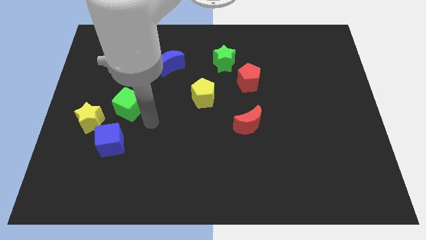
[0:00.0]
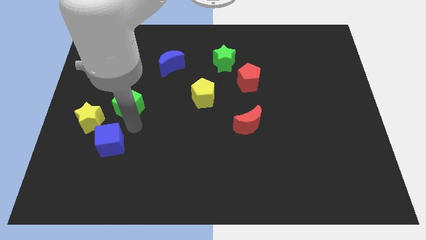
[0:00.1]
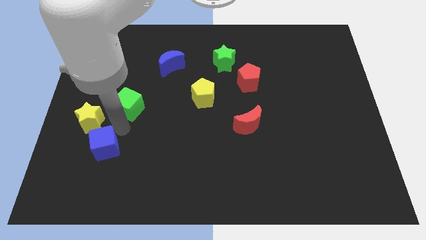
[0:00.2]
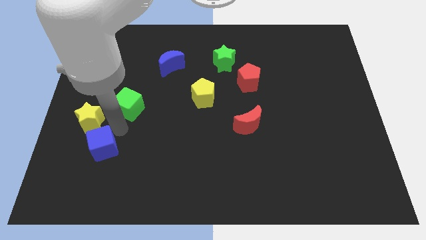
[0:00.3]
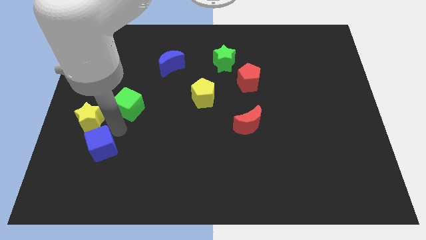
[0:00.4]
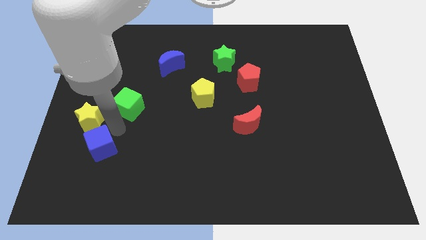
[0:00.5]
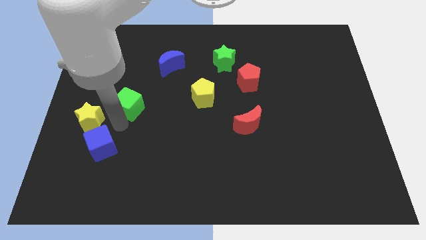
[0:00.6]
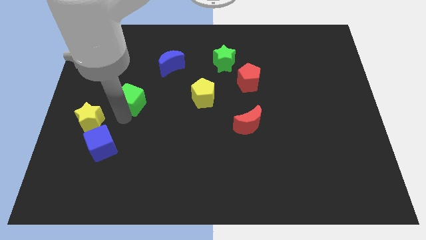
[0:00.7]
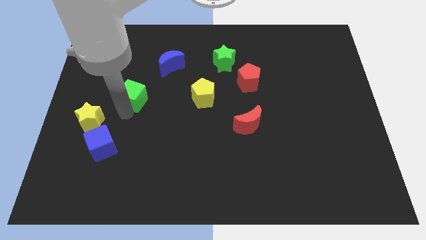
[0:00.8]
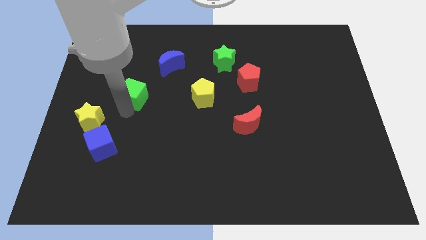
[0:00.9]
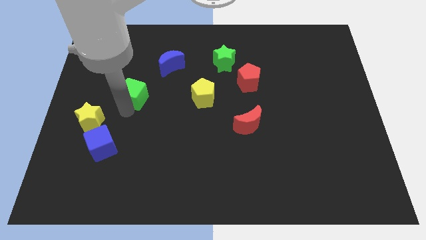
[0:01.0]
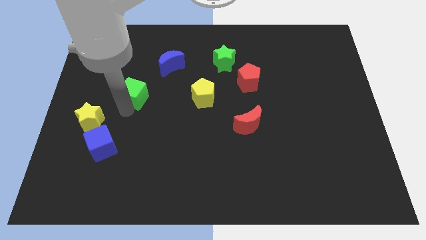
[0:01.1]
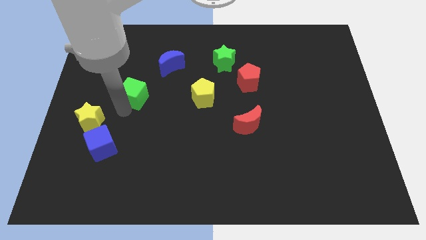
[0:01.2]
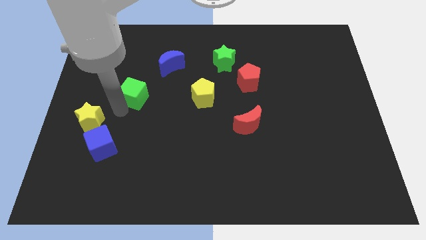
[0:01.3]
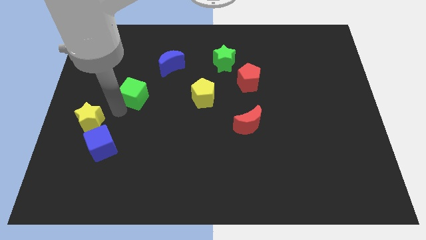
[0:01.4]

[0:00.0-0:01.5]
move the green cube slightly to the top

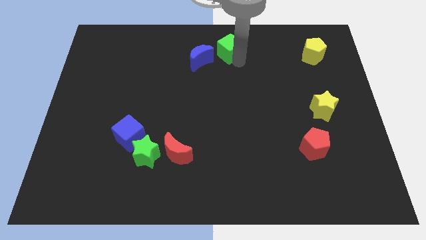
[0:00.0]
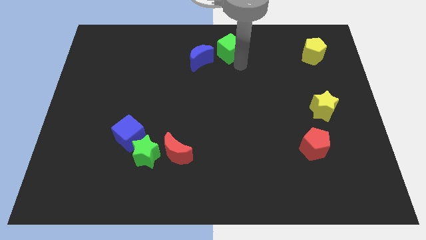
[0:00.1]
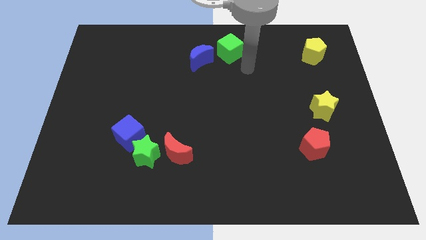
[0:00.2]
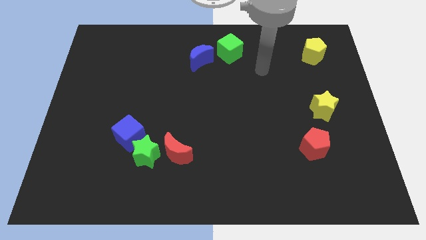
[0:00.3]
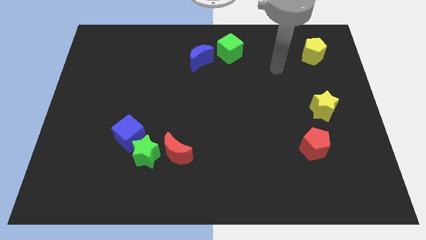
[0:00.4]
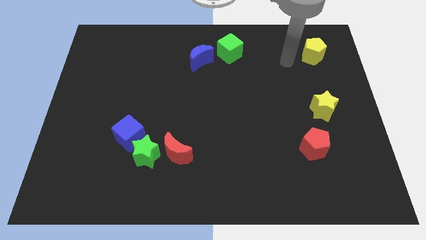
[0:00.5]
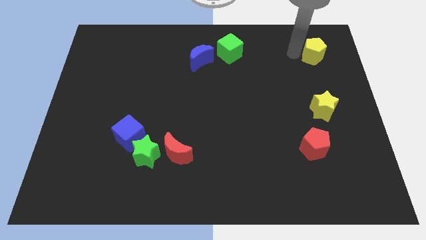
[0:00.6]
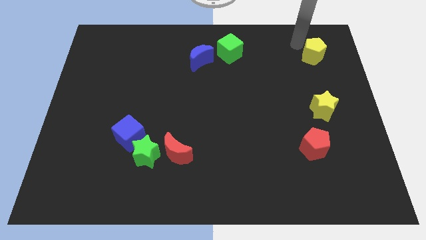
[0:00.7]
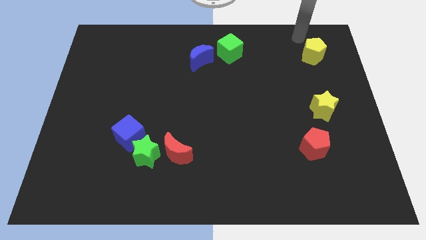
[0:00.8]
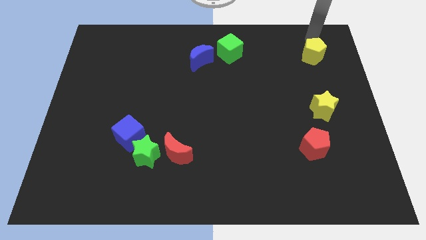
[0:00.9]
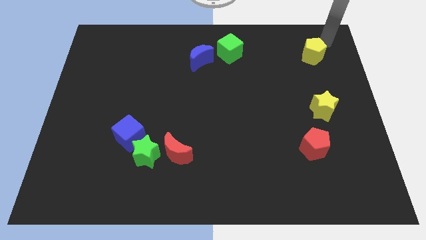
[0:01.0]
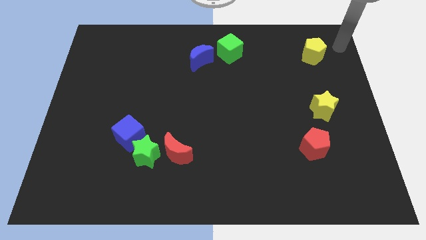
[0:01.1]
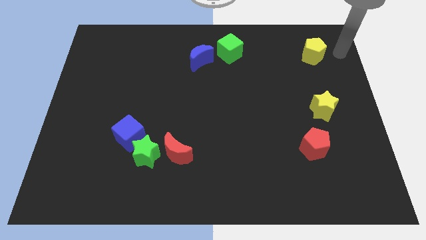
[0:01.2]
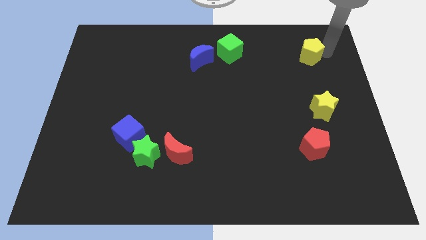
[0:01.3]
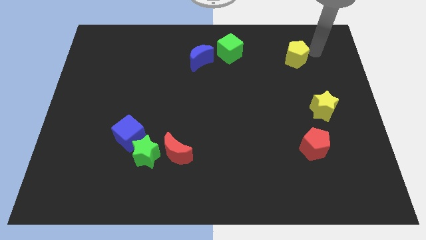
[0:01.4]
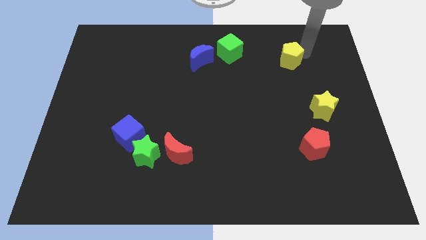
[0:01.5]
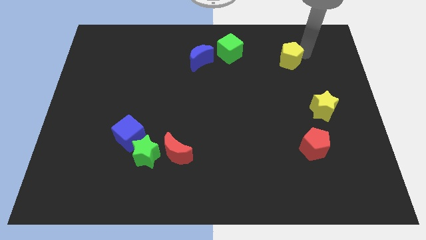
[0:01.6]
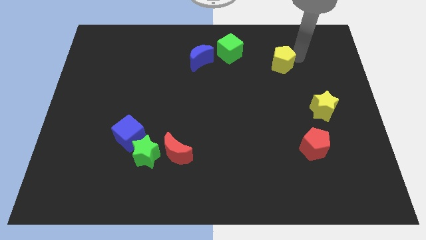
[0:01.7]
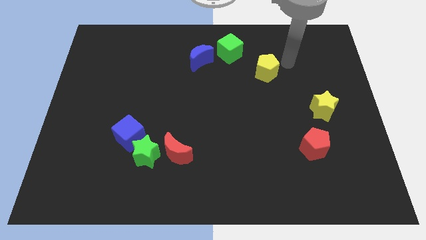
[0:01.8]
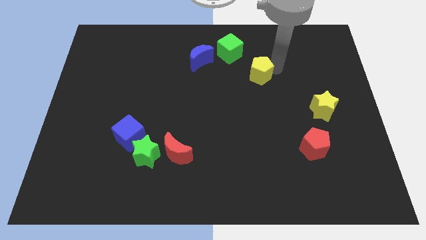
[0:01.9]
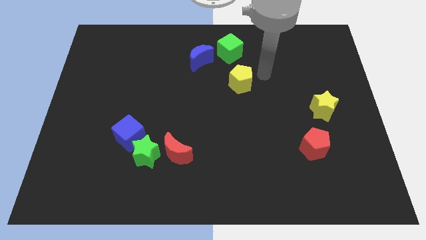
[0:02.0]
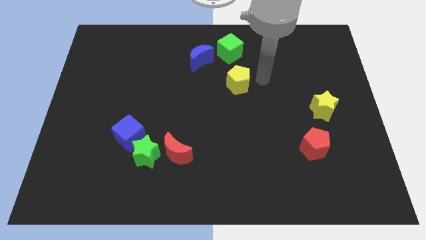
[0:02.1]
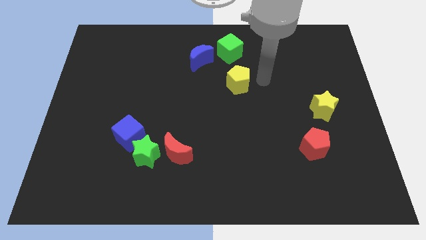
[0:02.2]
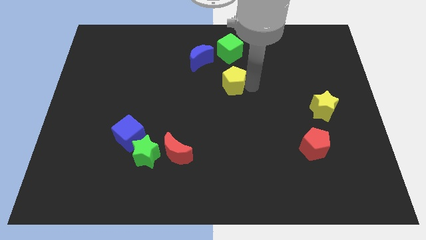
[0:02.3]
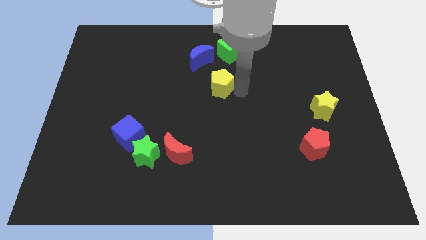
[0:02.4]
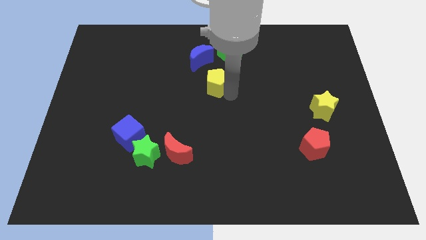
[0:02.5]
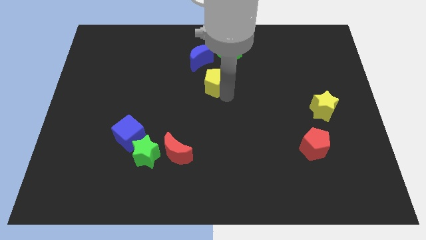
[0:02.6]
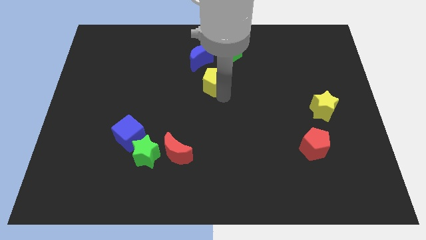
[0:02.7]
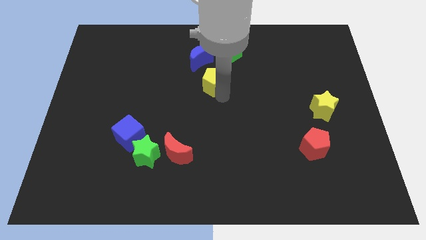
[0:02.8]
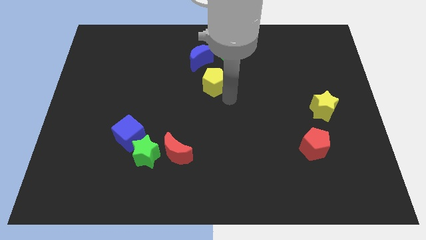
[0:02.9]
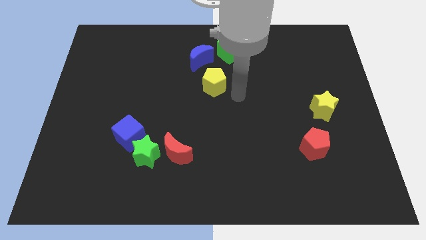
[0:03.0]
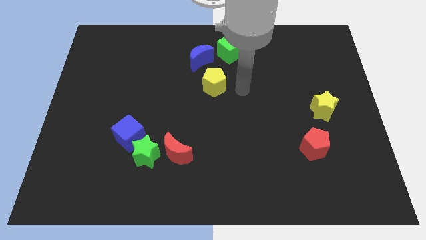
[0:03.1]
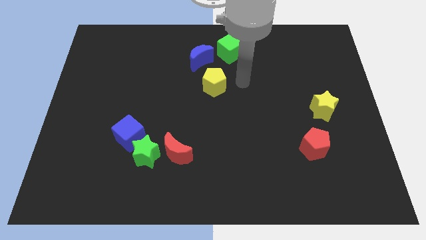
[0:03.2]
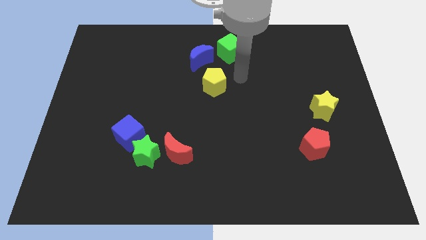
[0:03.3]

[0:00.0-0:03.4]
place the yellow pentagon at the bottom side of the green cube and blue crescent

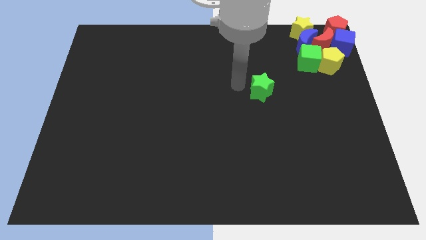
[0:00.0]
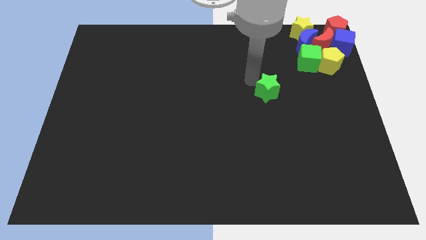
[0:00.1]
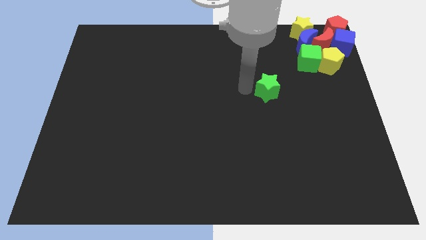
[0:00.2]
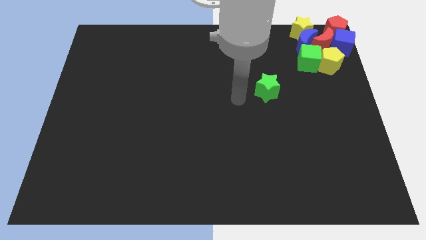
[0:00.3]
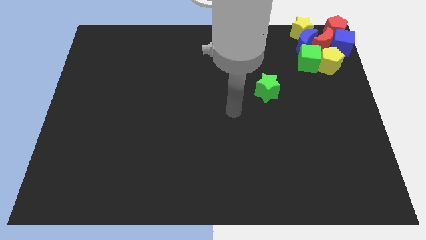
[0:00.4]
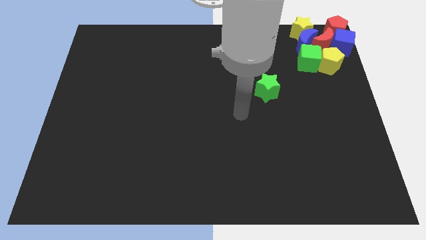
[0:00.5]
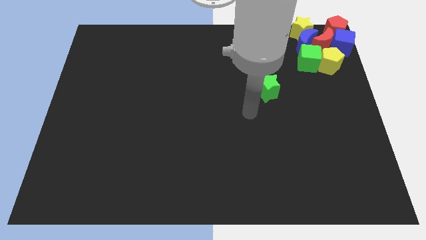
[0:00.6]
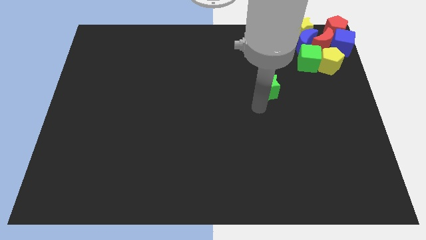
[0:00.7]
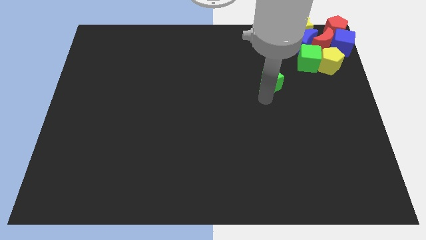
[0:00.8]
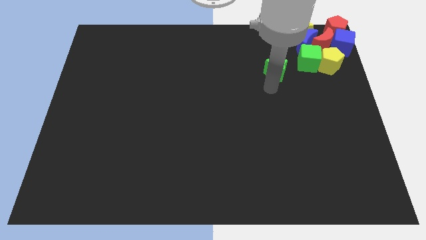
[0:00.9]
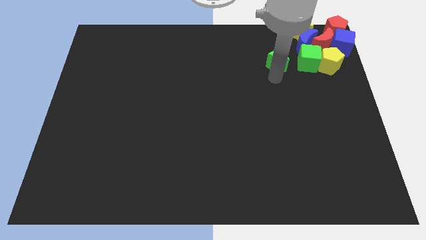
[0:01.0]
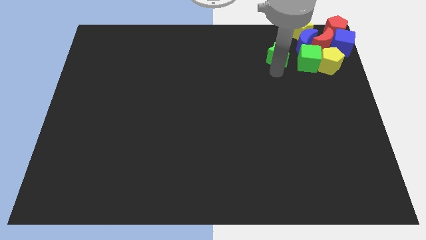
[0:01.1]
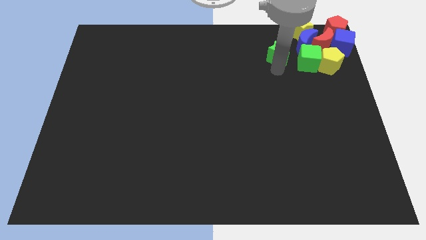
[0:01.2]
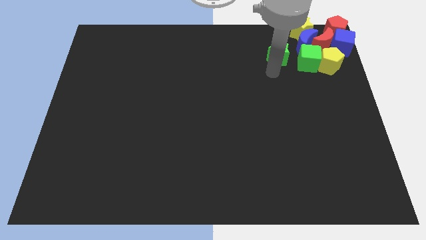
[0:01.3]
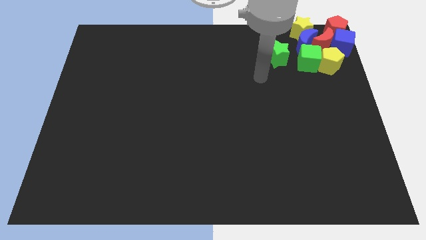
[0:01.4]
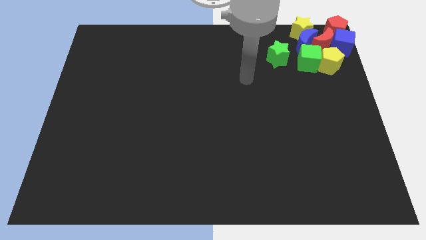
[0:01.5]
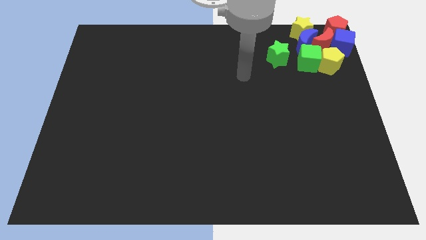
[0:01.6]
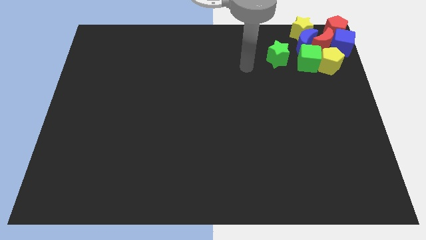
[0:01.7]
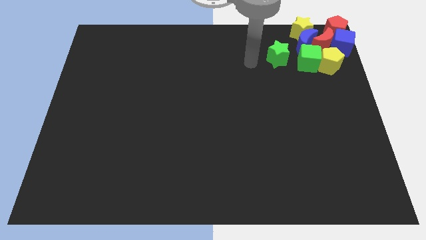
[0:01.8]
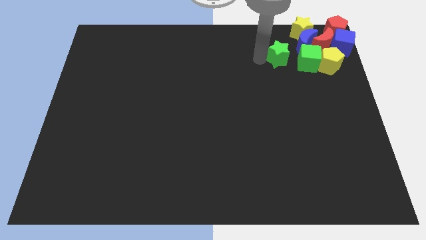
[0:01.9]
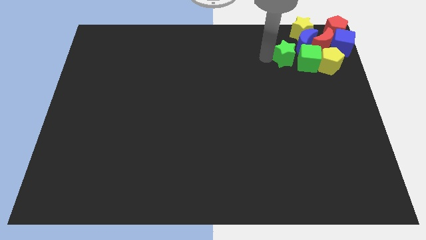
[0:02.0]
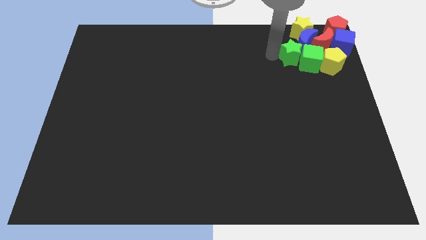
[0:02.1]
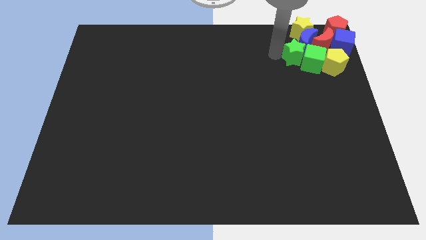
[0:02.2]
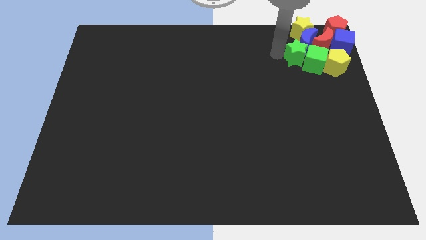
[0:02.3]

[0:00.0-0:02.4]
place the green star into left of the green cube

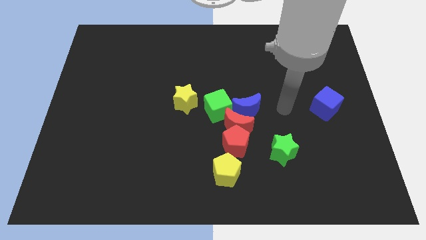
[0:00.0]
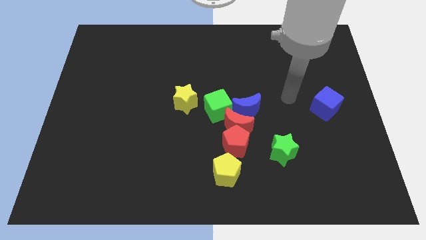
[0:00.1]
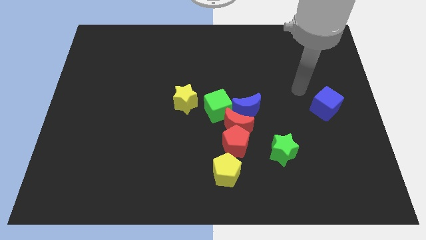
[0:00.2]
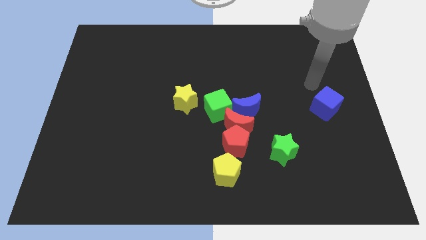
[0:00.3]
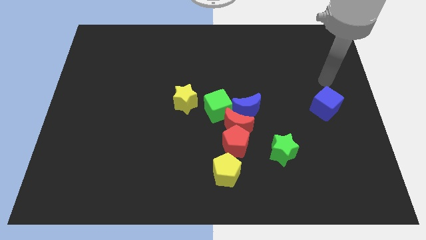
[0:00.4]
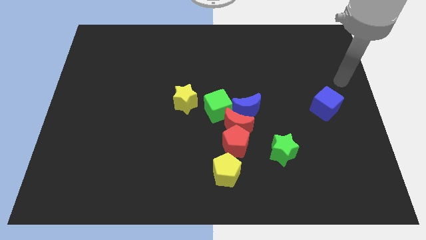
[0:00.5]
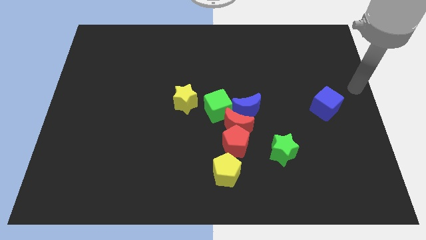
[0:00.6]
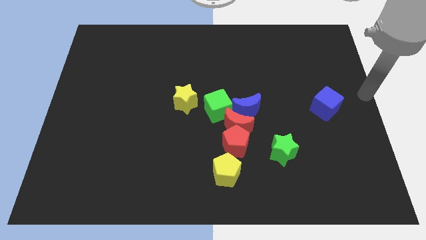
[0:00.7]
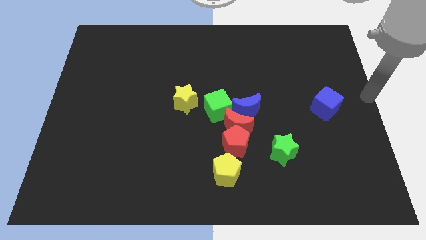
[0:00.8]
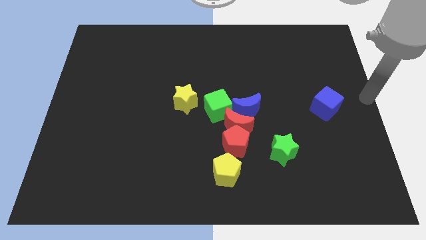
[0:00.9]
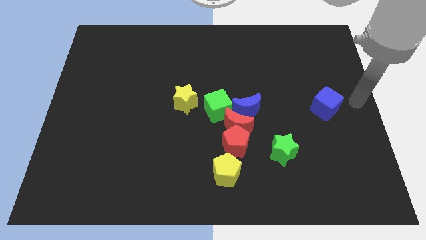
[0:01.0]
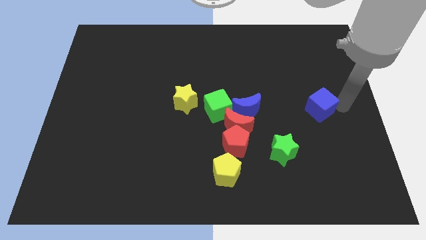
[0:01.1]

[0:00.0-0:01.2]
move the arm towards the blue cube

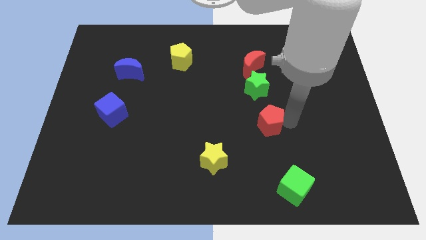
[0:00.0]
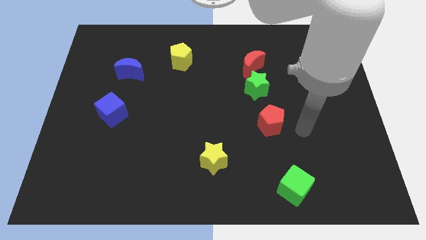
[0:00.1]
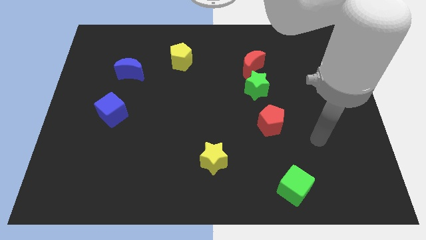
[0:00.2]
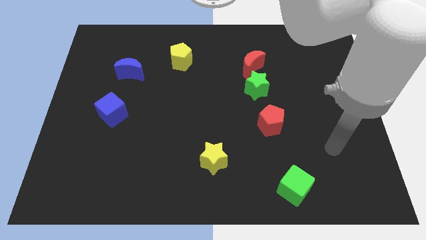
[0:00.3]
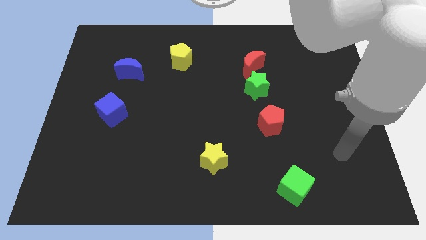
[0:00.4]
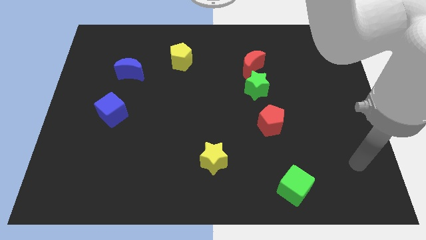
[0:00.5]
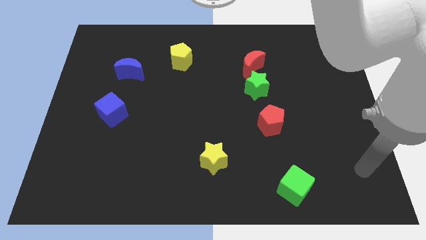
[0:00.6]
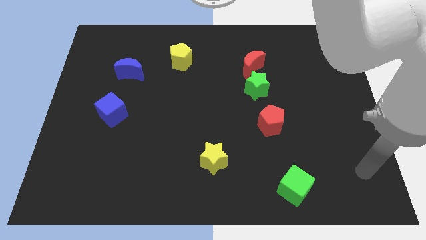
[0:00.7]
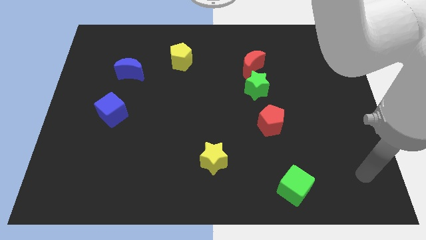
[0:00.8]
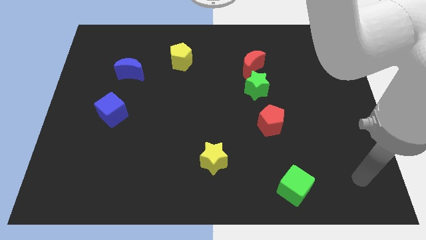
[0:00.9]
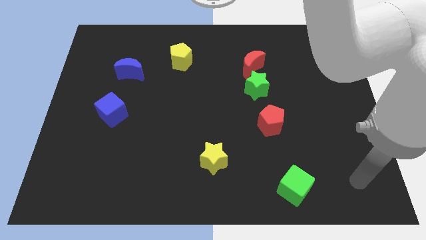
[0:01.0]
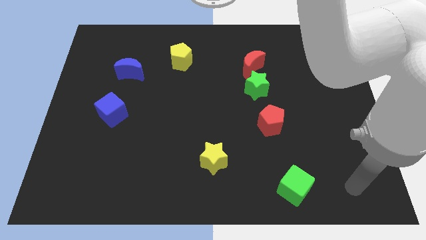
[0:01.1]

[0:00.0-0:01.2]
place your hand at the right of the green cube
